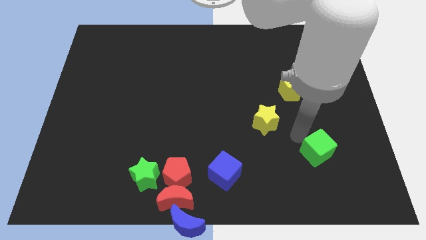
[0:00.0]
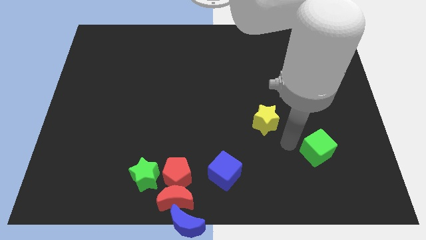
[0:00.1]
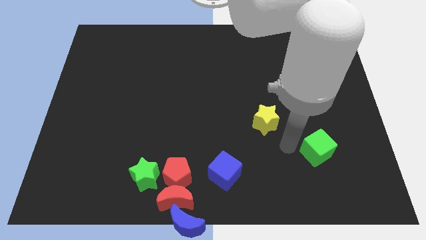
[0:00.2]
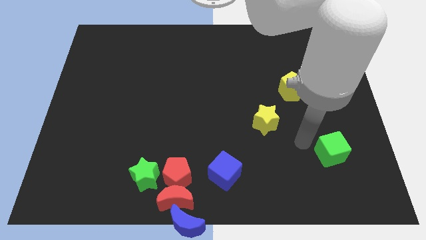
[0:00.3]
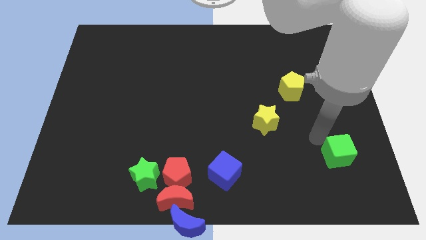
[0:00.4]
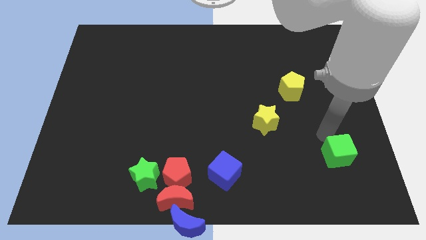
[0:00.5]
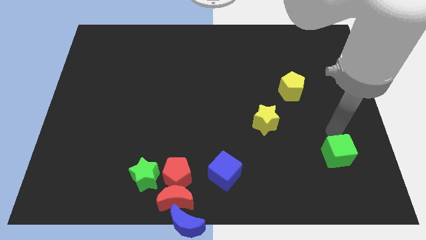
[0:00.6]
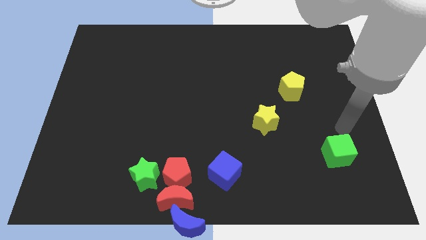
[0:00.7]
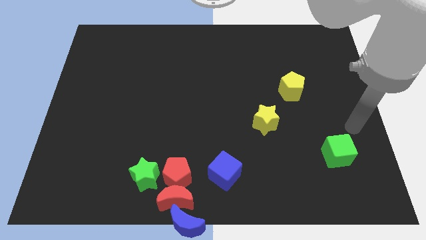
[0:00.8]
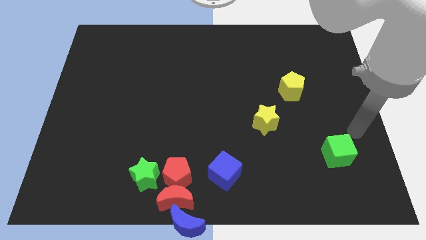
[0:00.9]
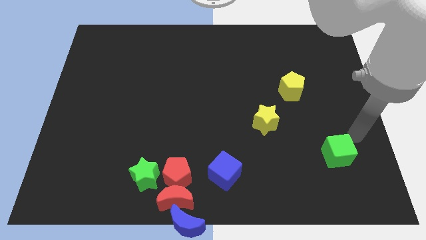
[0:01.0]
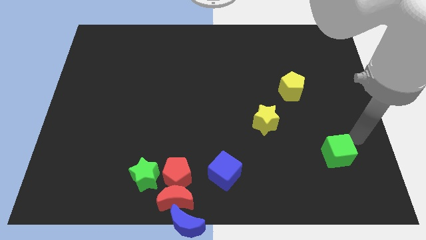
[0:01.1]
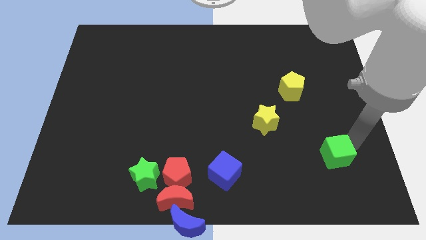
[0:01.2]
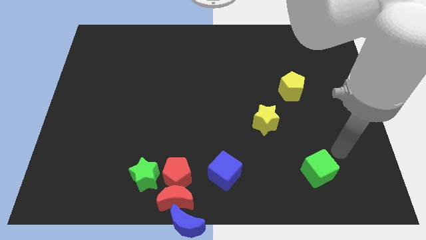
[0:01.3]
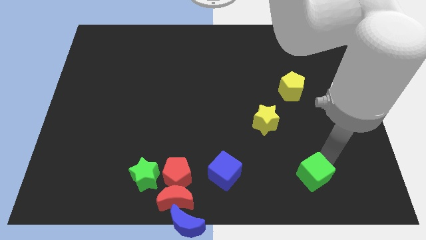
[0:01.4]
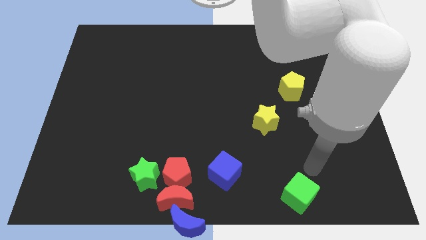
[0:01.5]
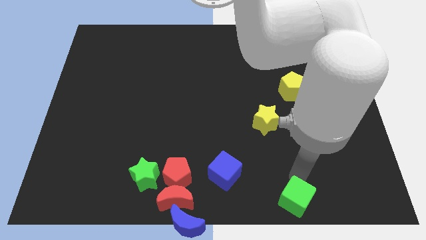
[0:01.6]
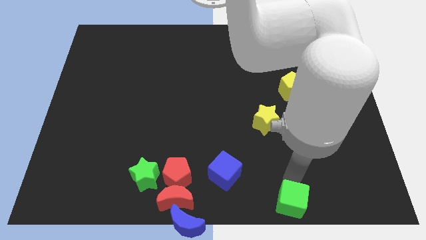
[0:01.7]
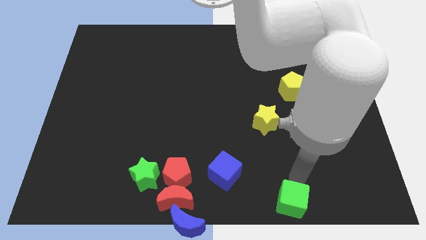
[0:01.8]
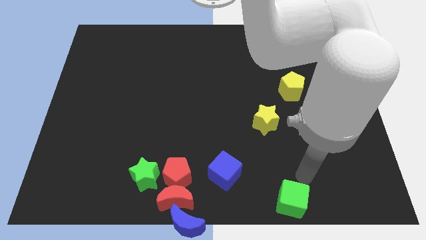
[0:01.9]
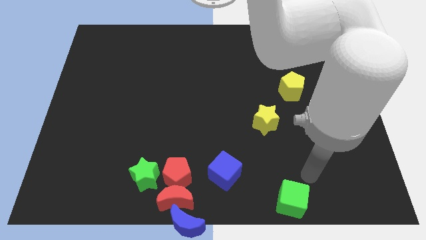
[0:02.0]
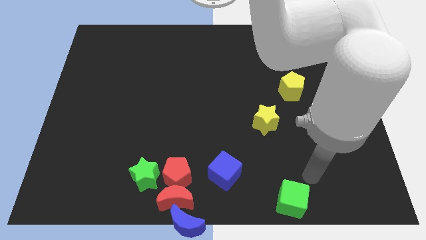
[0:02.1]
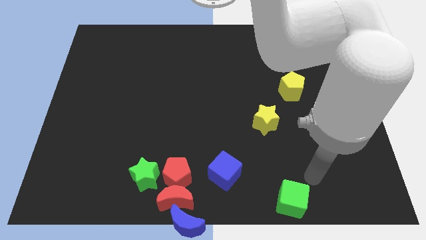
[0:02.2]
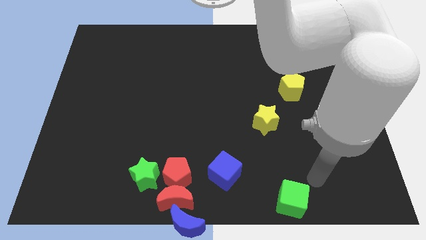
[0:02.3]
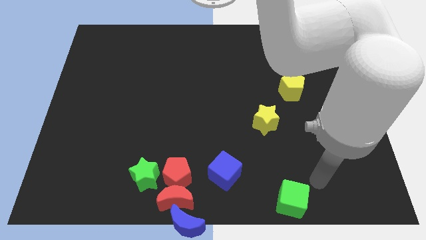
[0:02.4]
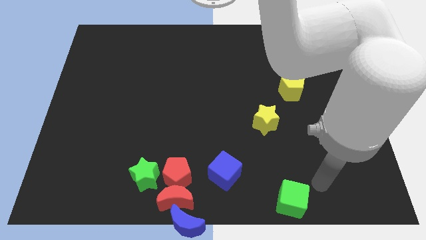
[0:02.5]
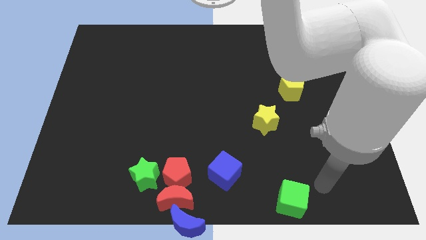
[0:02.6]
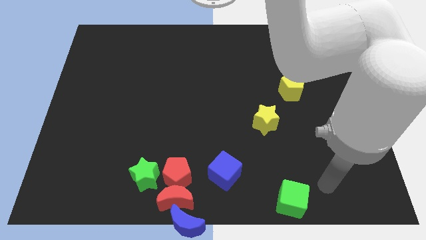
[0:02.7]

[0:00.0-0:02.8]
slide the green cube towards the bottom

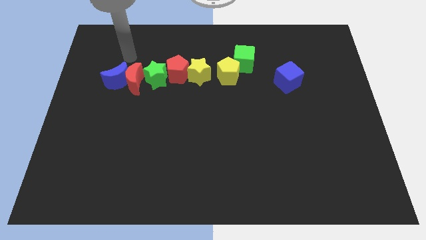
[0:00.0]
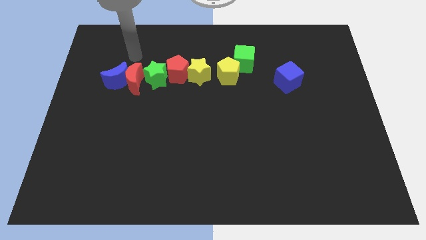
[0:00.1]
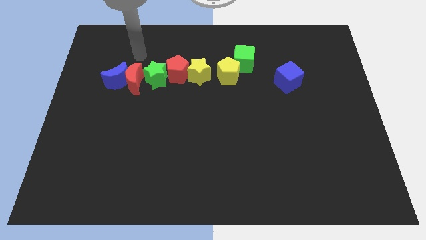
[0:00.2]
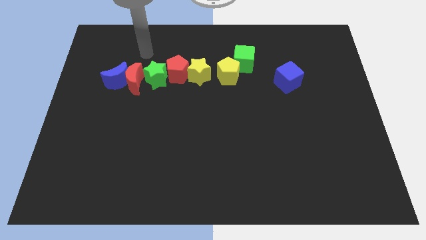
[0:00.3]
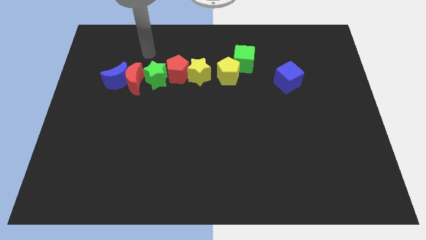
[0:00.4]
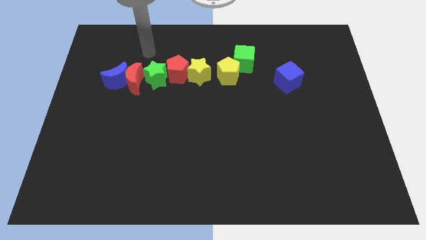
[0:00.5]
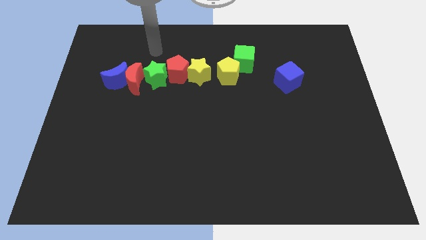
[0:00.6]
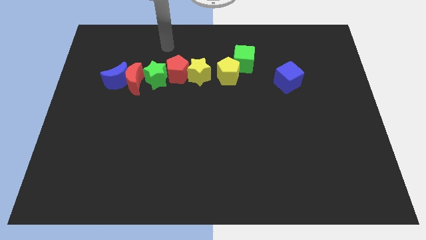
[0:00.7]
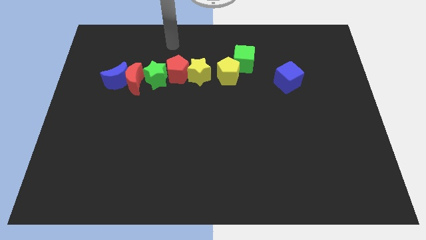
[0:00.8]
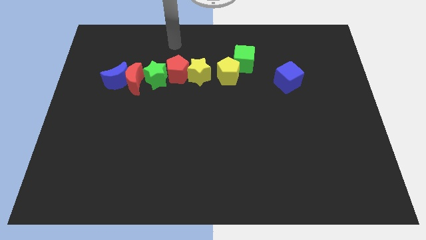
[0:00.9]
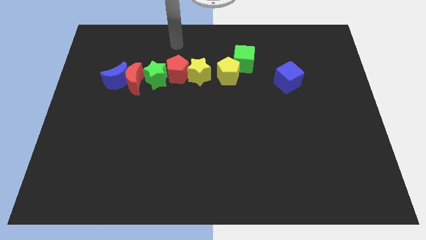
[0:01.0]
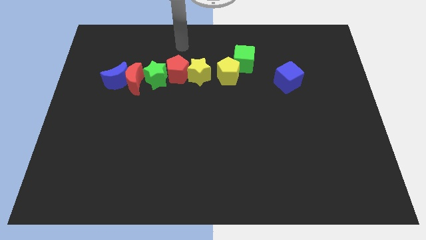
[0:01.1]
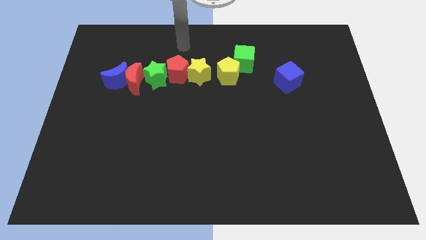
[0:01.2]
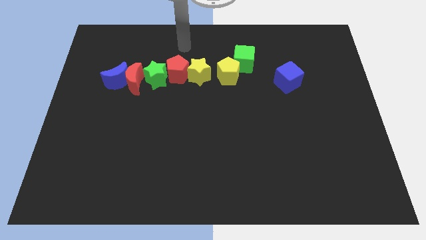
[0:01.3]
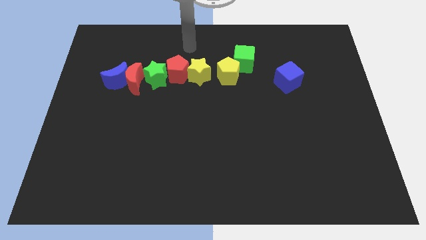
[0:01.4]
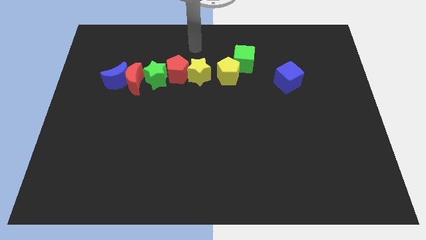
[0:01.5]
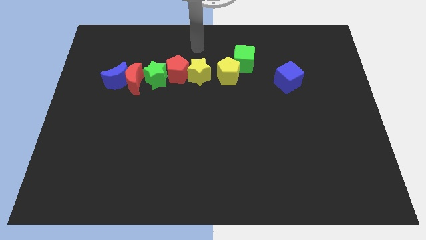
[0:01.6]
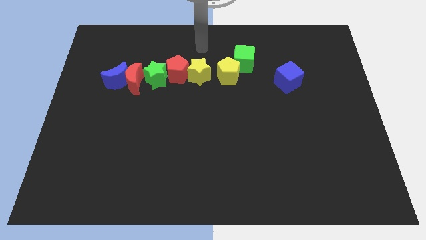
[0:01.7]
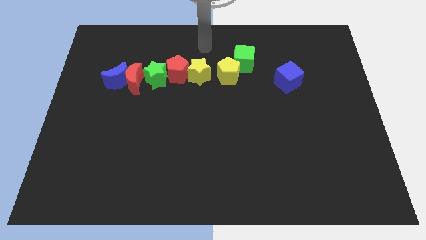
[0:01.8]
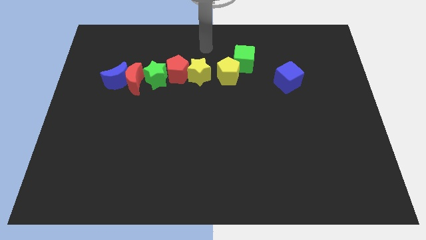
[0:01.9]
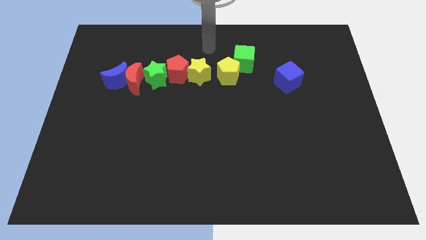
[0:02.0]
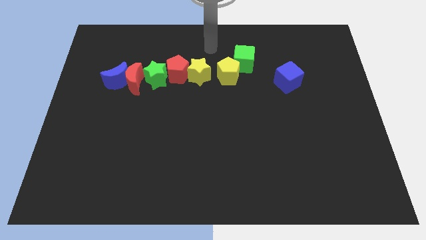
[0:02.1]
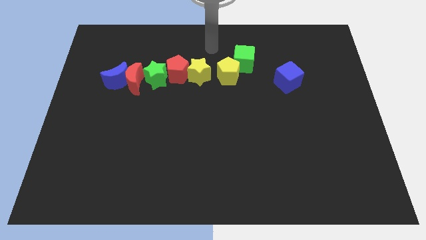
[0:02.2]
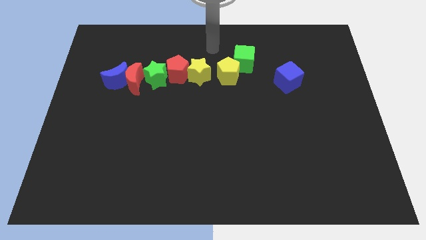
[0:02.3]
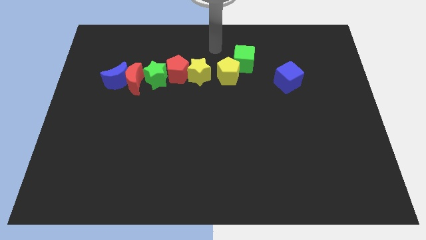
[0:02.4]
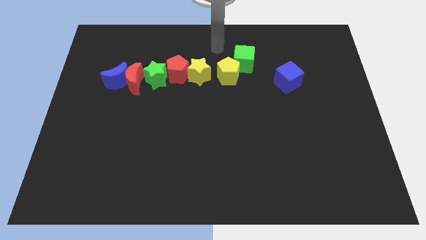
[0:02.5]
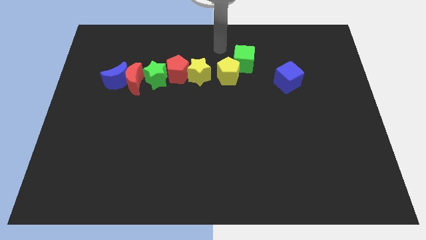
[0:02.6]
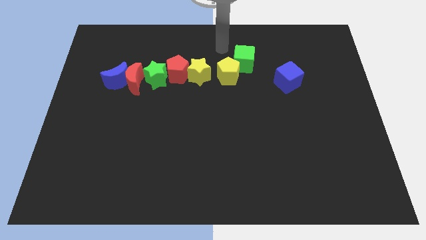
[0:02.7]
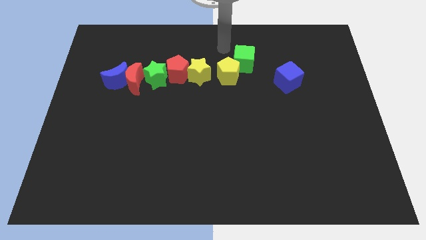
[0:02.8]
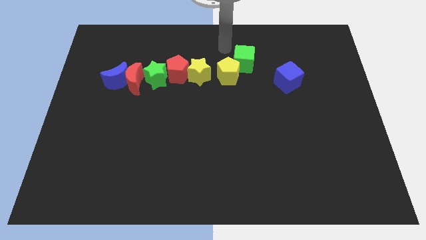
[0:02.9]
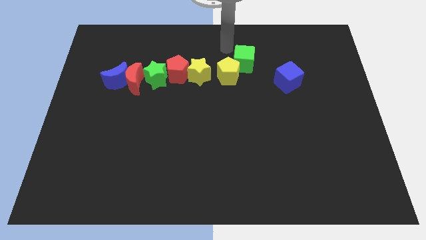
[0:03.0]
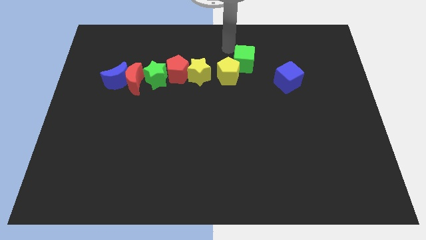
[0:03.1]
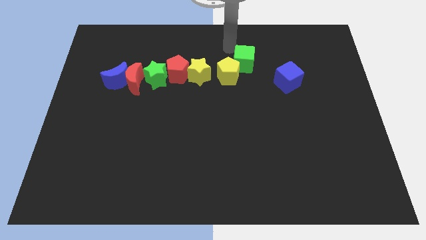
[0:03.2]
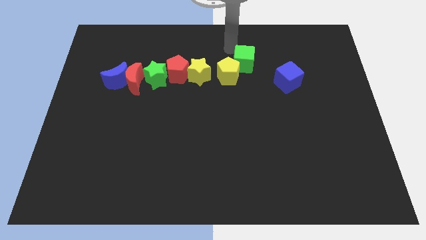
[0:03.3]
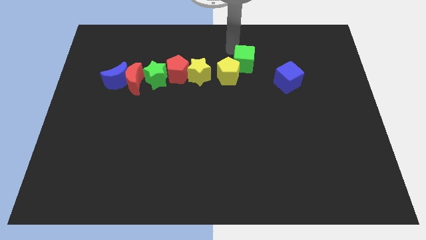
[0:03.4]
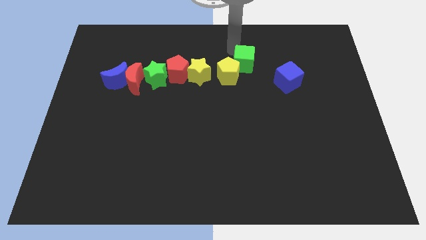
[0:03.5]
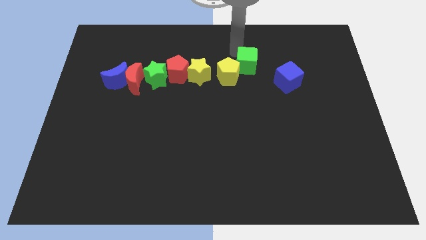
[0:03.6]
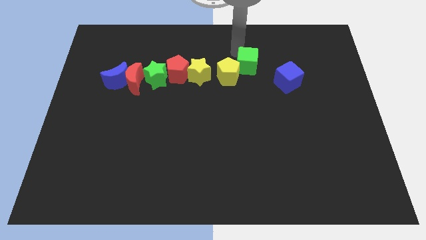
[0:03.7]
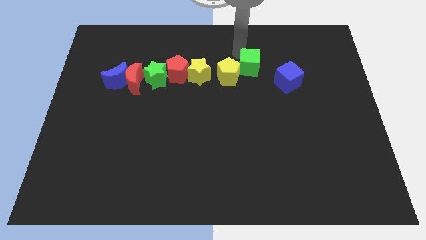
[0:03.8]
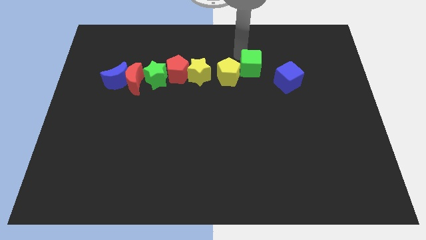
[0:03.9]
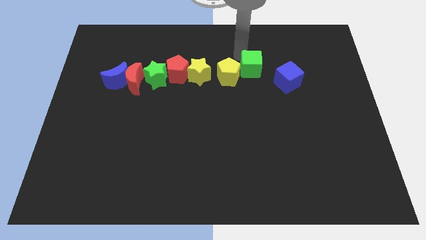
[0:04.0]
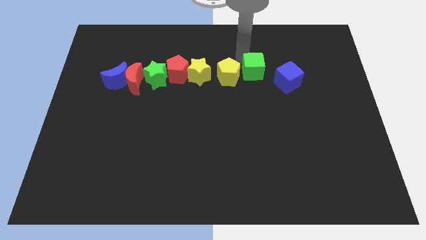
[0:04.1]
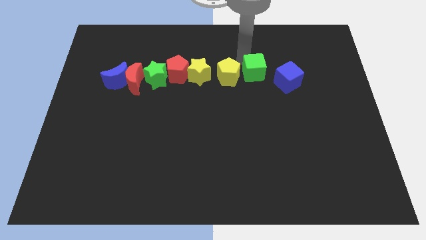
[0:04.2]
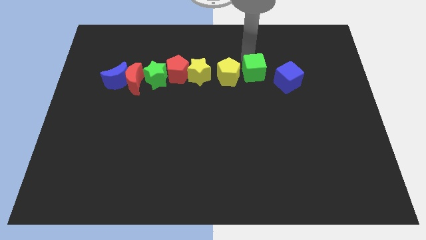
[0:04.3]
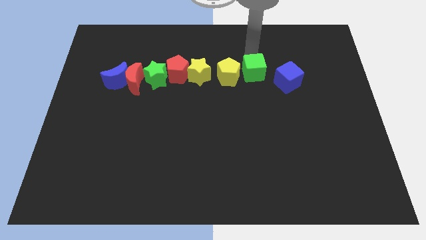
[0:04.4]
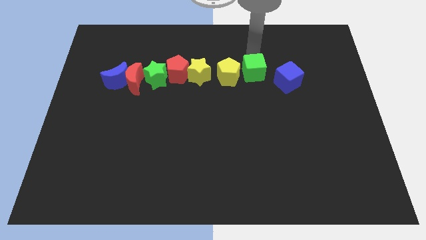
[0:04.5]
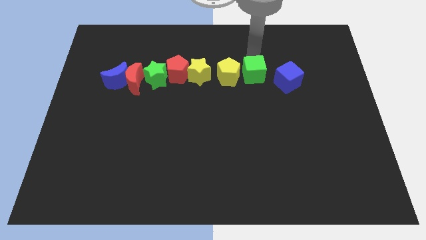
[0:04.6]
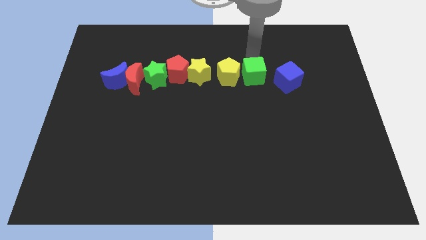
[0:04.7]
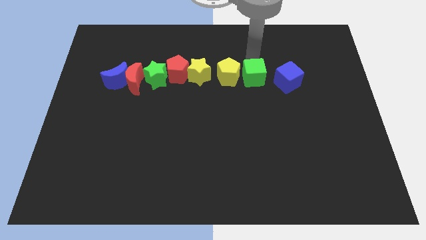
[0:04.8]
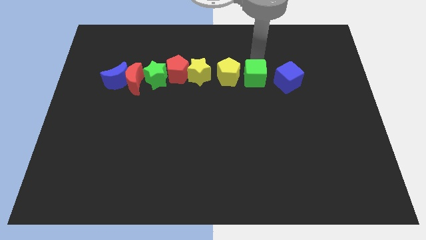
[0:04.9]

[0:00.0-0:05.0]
place the green cube to the right side of the yellow pentagon

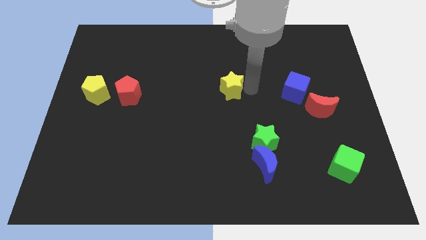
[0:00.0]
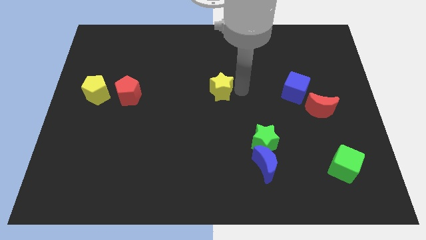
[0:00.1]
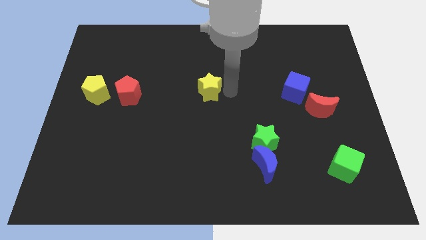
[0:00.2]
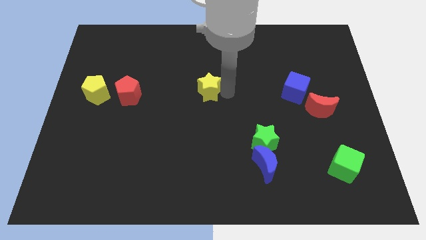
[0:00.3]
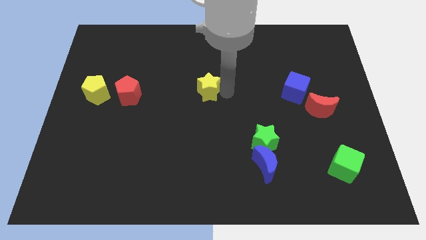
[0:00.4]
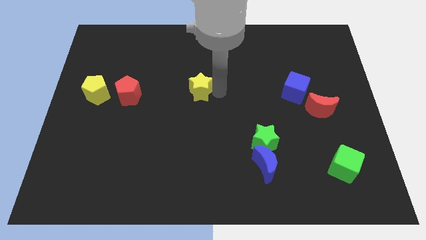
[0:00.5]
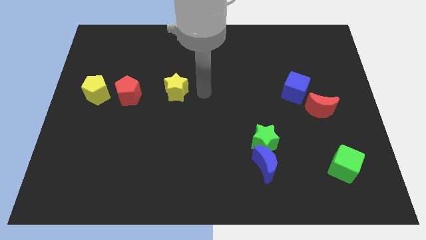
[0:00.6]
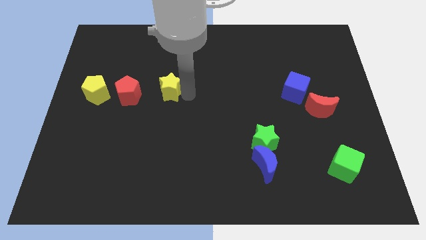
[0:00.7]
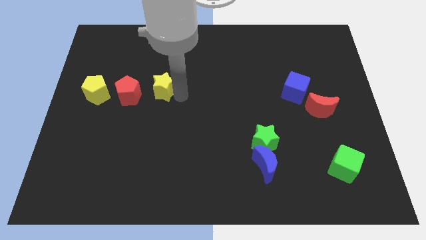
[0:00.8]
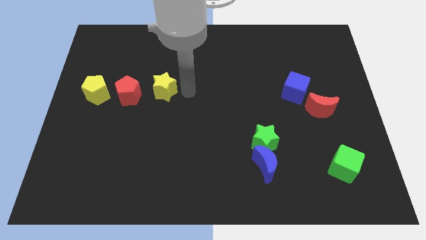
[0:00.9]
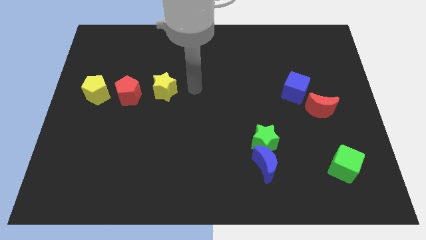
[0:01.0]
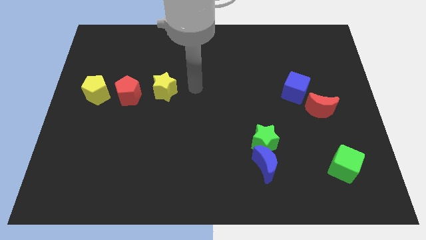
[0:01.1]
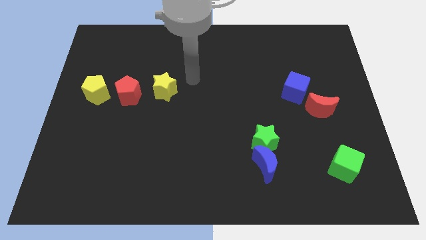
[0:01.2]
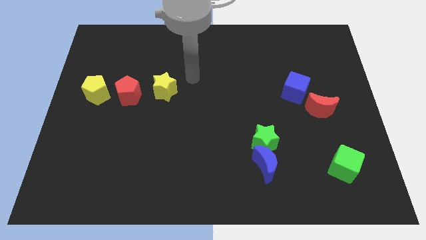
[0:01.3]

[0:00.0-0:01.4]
place the yellow star right to the red pentagon
